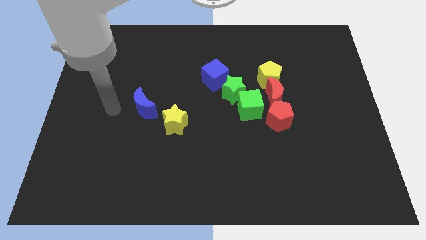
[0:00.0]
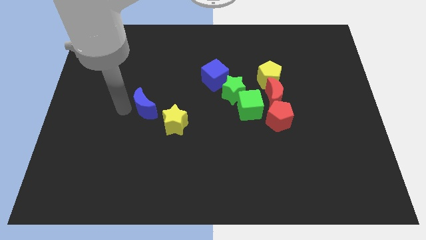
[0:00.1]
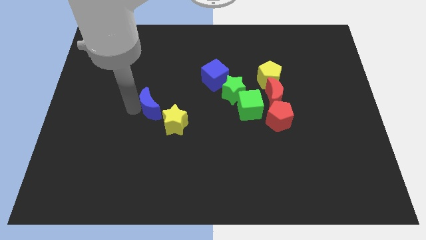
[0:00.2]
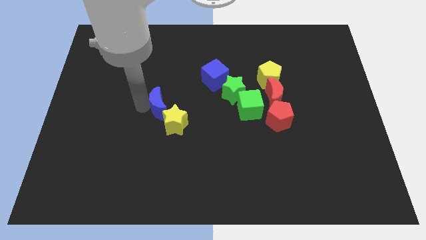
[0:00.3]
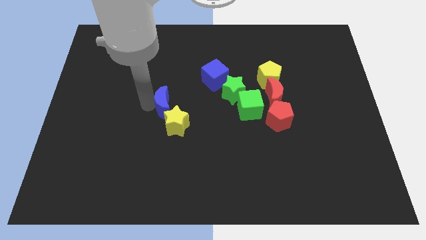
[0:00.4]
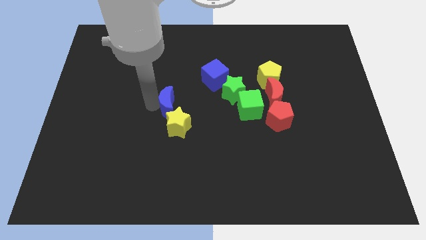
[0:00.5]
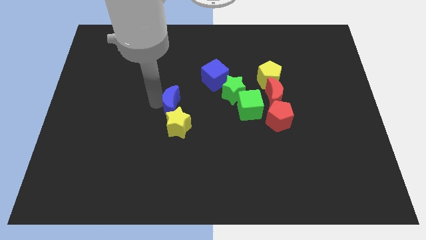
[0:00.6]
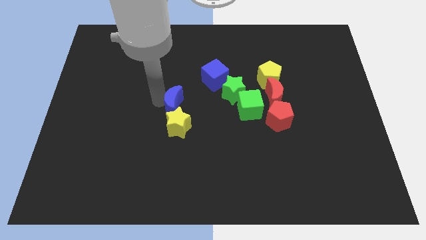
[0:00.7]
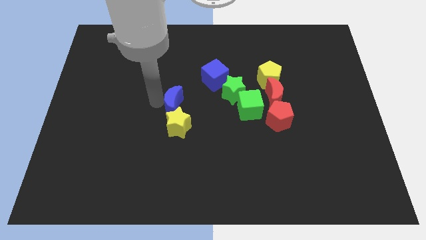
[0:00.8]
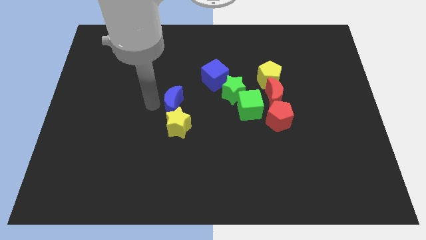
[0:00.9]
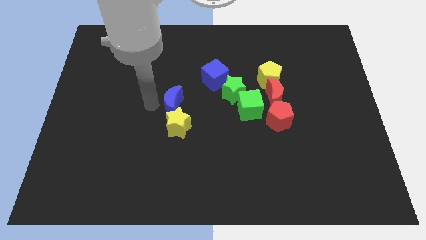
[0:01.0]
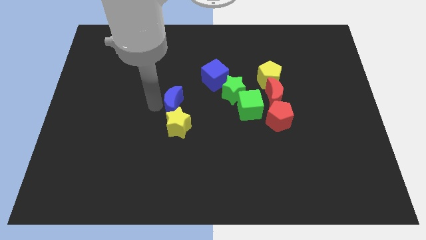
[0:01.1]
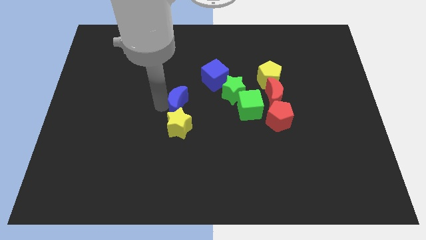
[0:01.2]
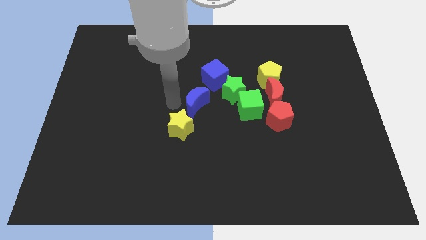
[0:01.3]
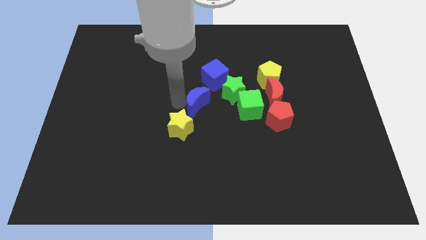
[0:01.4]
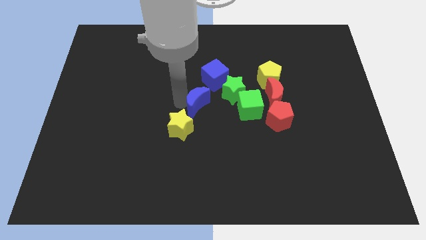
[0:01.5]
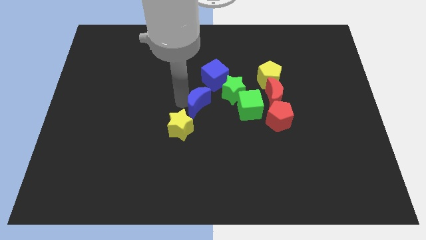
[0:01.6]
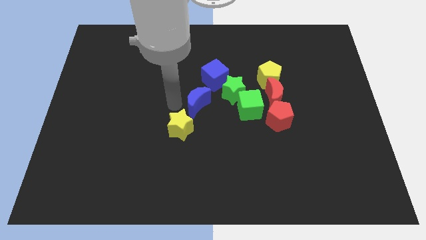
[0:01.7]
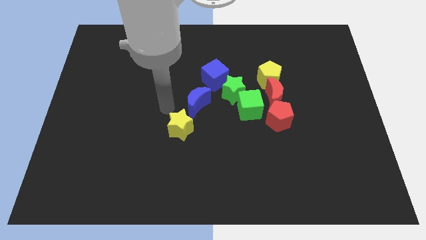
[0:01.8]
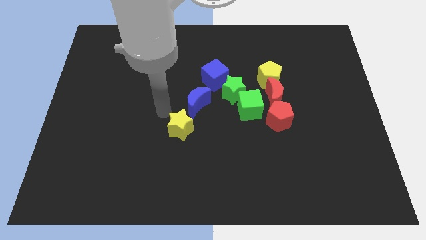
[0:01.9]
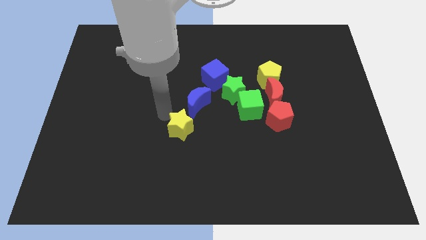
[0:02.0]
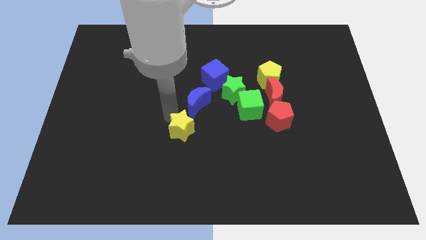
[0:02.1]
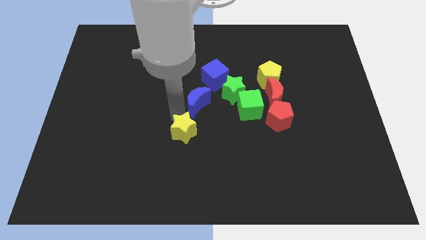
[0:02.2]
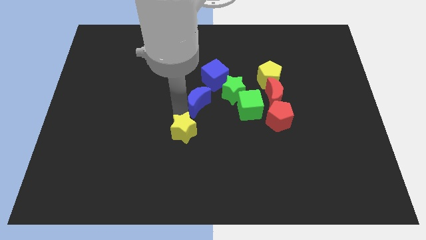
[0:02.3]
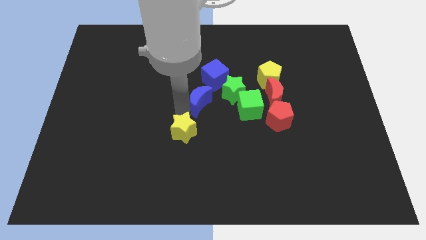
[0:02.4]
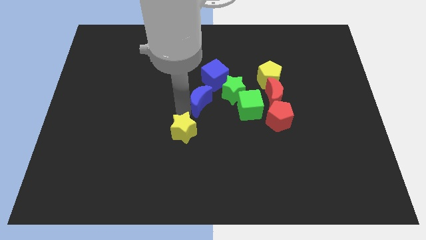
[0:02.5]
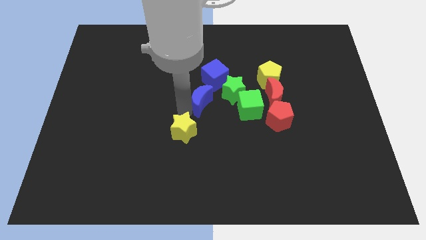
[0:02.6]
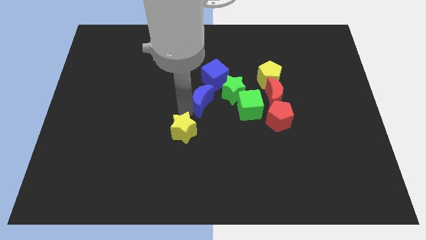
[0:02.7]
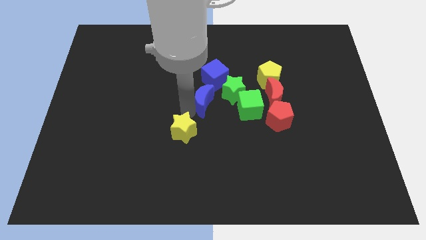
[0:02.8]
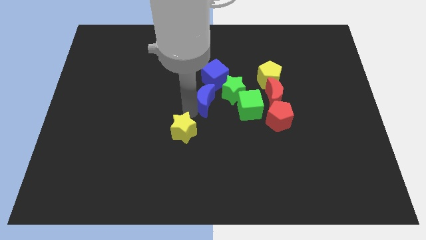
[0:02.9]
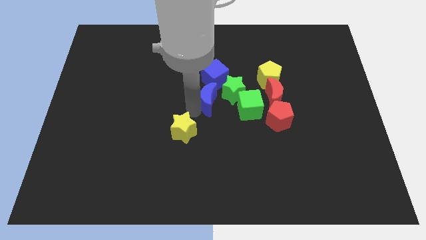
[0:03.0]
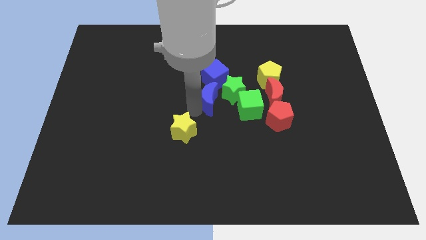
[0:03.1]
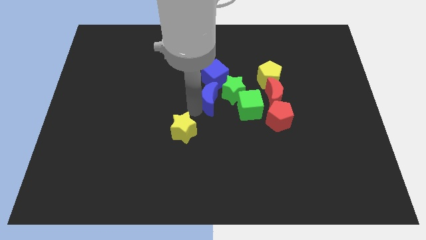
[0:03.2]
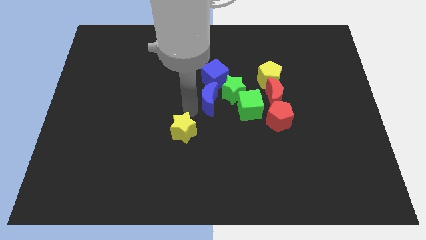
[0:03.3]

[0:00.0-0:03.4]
move the blue crescent to the bottom of the blue cube

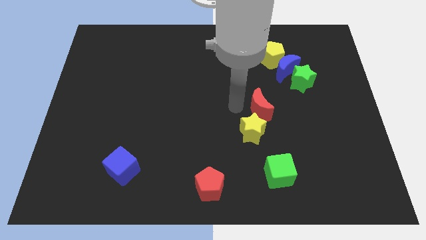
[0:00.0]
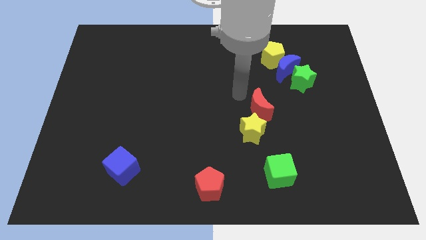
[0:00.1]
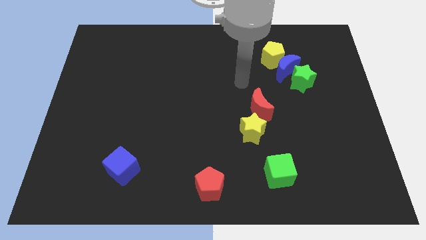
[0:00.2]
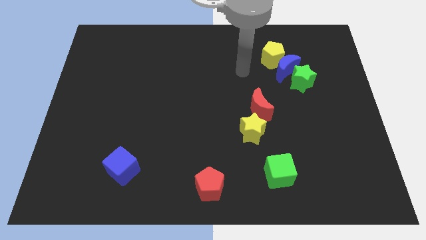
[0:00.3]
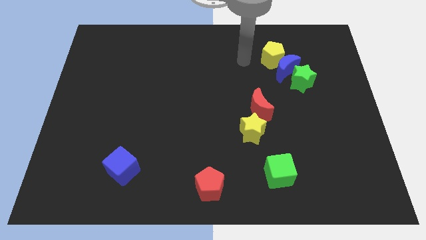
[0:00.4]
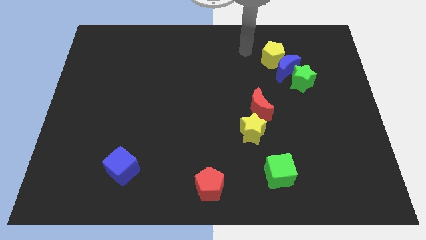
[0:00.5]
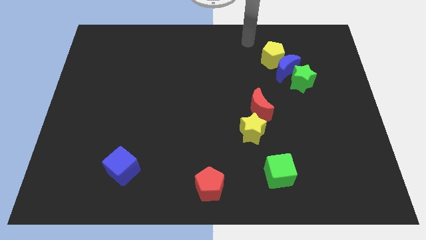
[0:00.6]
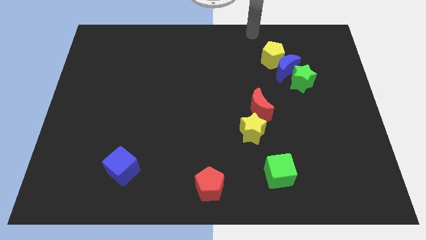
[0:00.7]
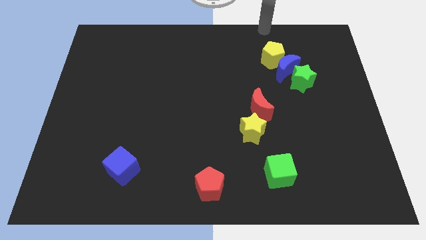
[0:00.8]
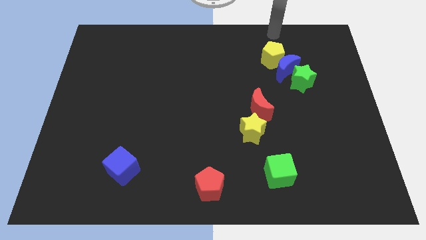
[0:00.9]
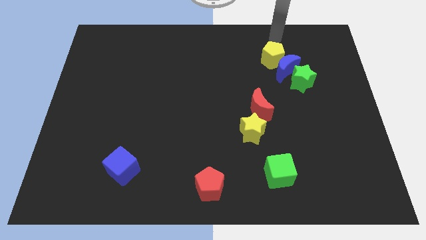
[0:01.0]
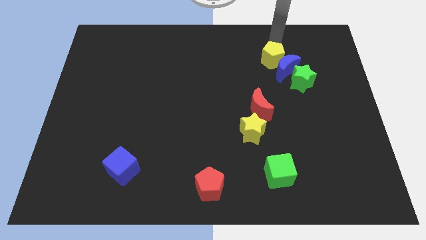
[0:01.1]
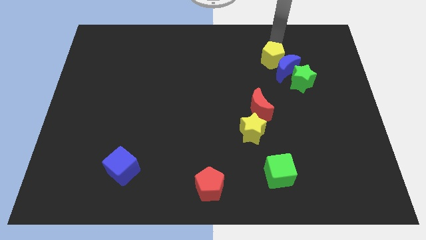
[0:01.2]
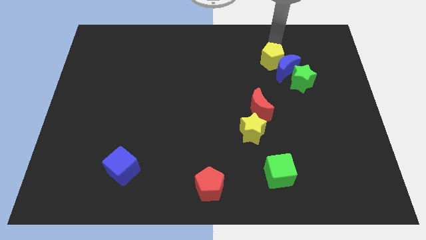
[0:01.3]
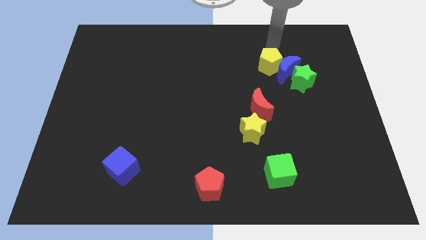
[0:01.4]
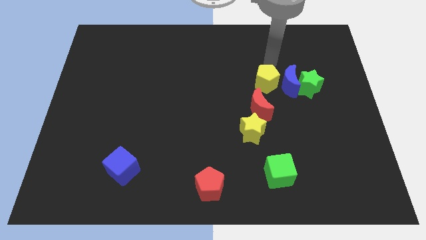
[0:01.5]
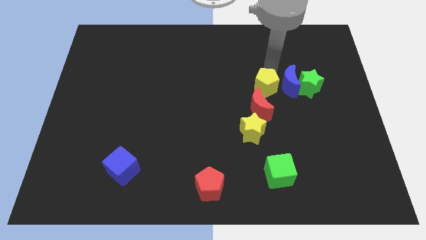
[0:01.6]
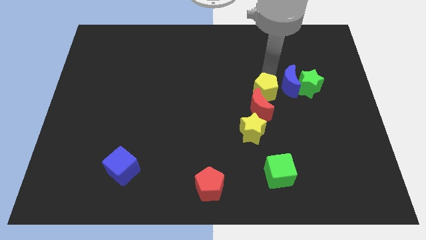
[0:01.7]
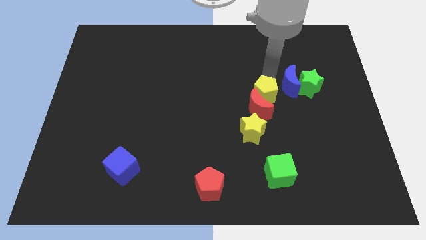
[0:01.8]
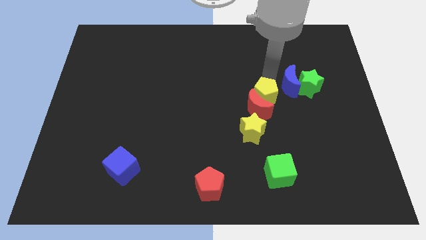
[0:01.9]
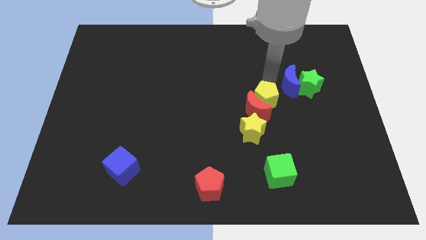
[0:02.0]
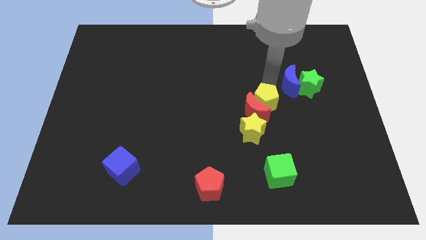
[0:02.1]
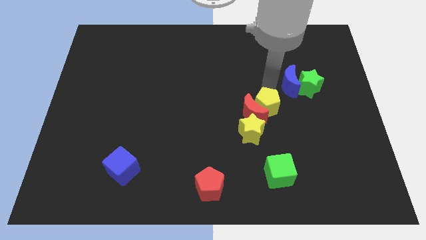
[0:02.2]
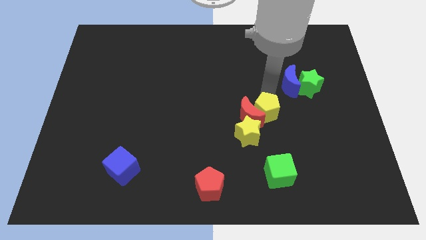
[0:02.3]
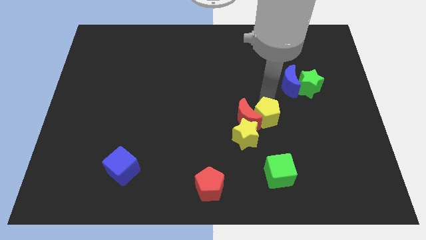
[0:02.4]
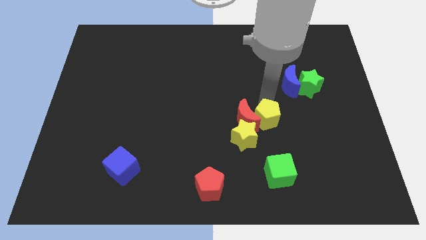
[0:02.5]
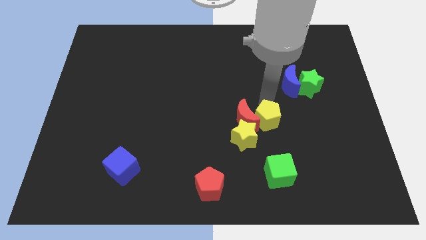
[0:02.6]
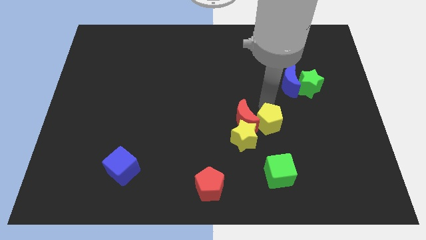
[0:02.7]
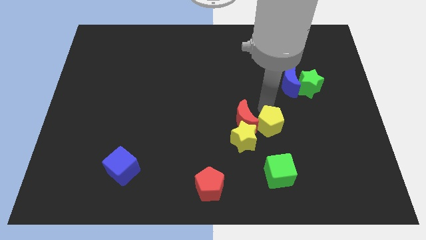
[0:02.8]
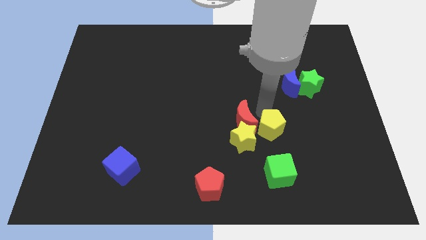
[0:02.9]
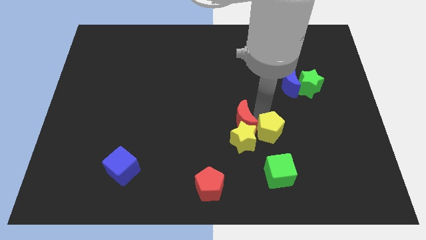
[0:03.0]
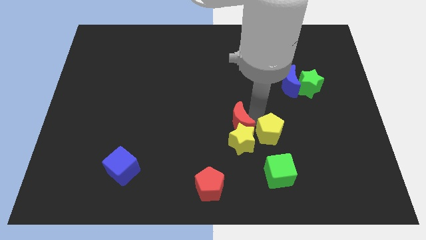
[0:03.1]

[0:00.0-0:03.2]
place yellow pentagon to the top of green cube

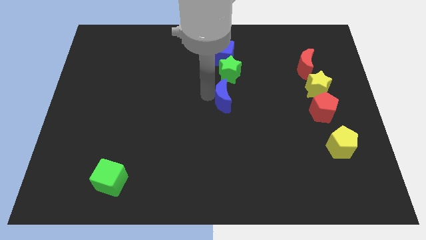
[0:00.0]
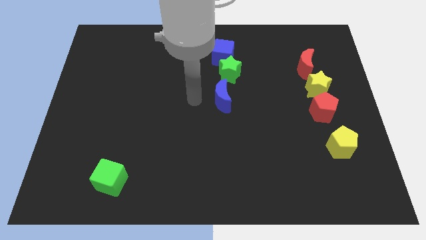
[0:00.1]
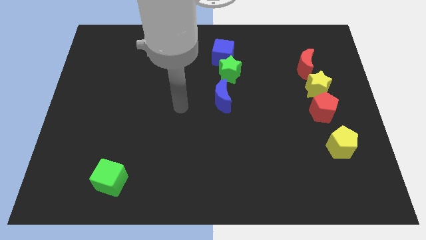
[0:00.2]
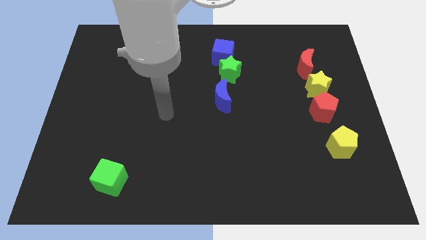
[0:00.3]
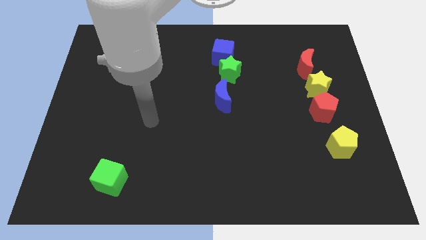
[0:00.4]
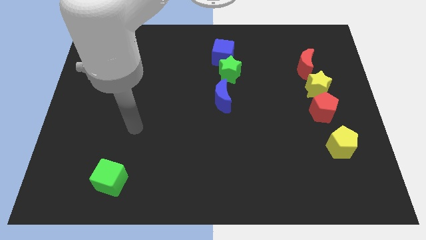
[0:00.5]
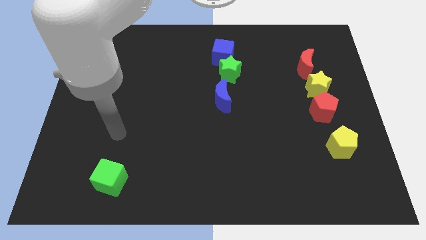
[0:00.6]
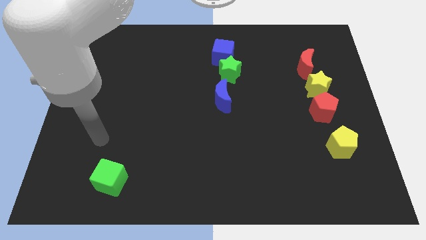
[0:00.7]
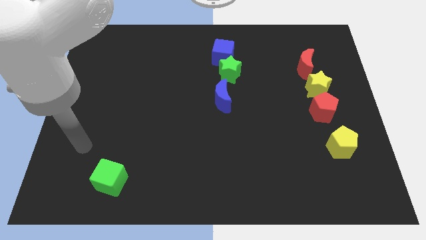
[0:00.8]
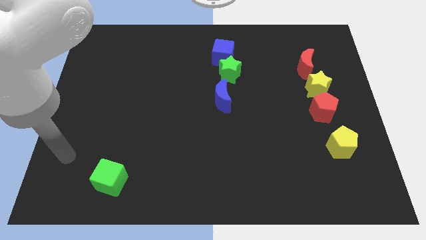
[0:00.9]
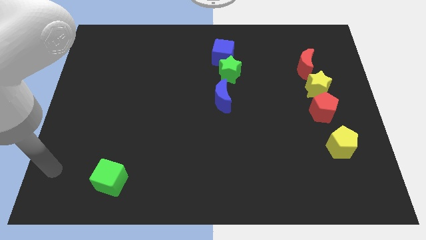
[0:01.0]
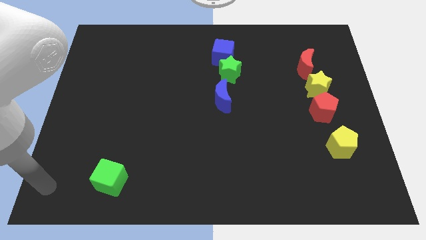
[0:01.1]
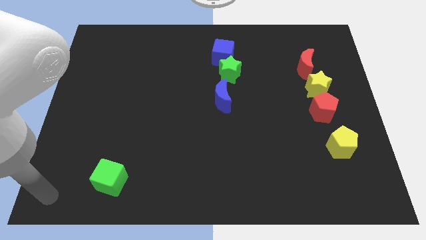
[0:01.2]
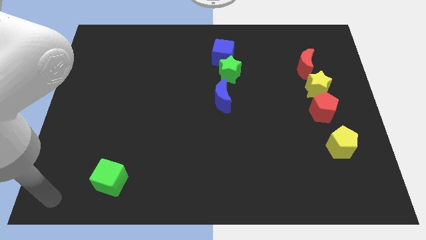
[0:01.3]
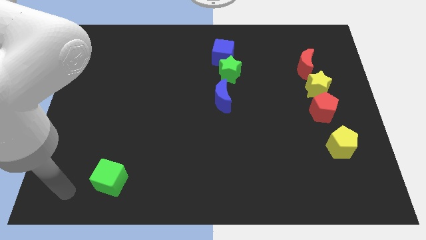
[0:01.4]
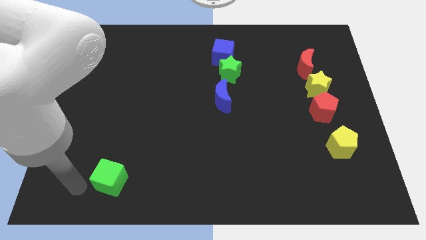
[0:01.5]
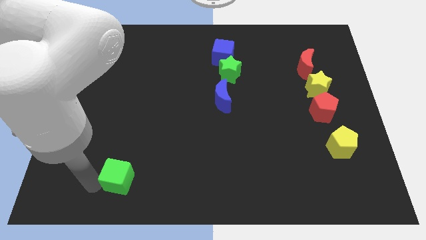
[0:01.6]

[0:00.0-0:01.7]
move your arm to the left side of the green cube

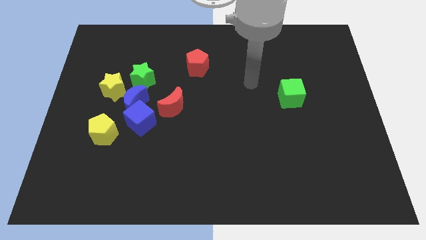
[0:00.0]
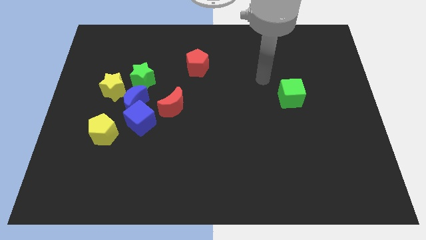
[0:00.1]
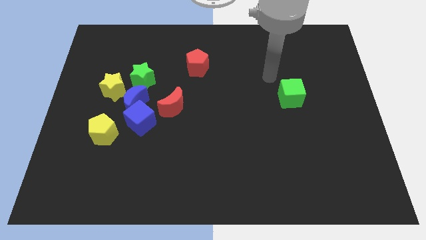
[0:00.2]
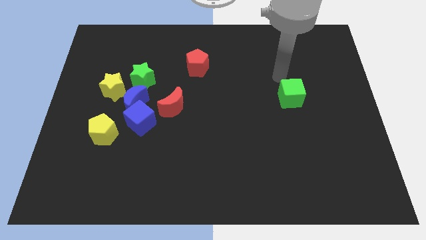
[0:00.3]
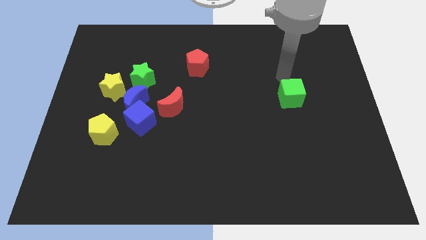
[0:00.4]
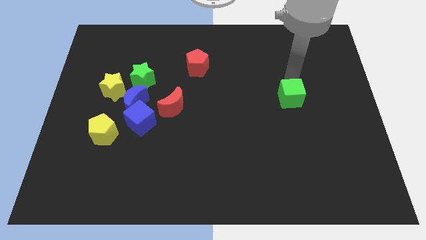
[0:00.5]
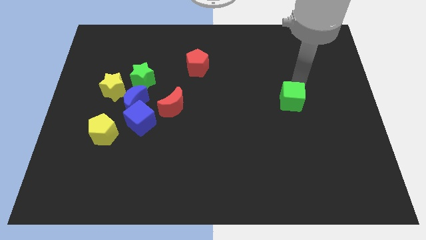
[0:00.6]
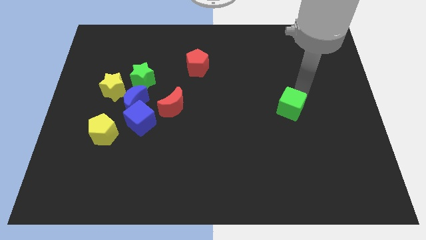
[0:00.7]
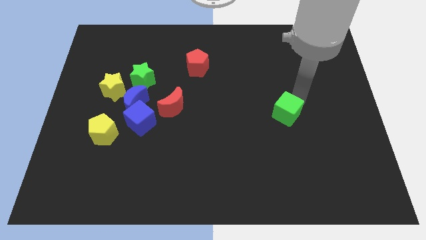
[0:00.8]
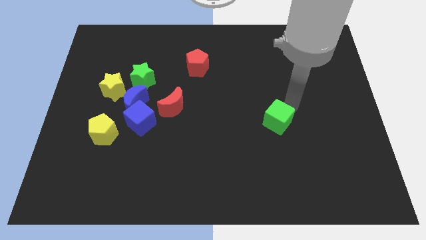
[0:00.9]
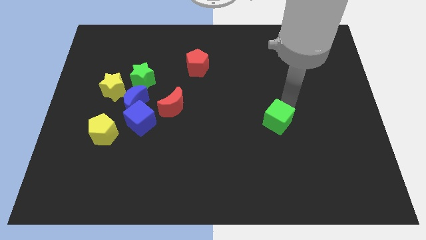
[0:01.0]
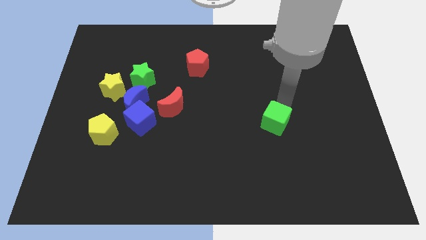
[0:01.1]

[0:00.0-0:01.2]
slightly push green cube down
